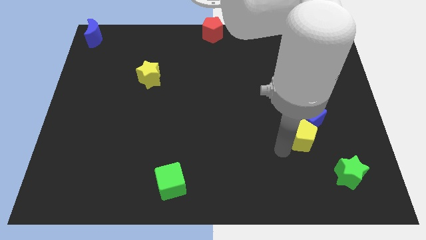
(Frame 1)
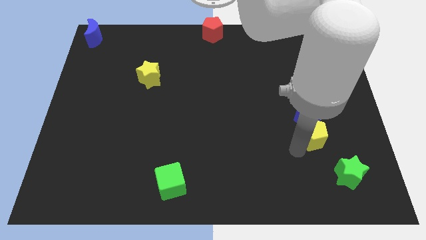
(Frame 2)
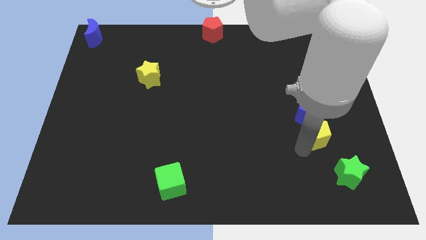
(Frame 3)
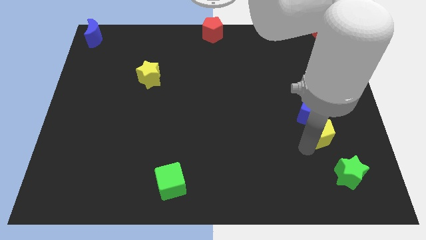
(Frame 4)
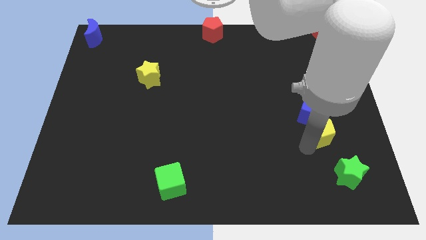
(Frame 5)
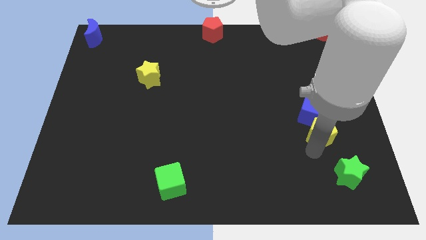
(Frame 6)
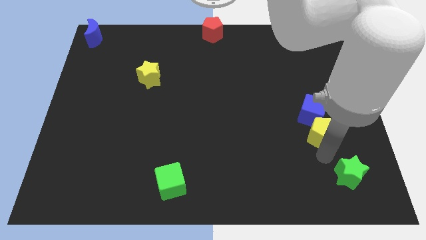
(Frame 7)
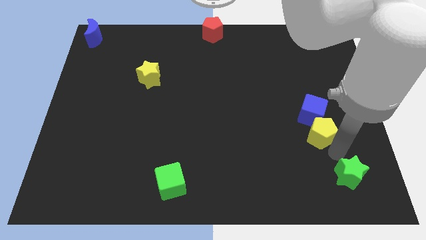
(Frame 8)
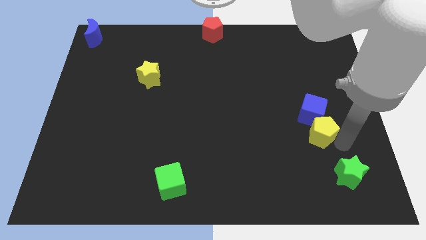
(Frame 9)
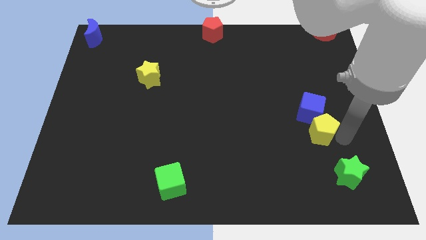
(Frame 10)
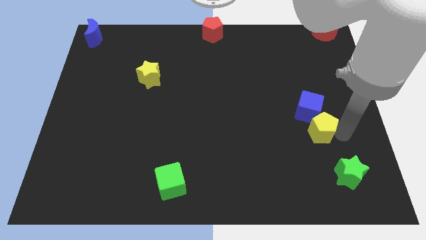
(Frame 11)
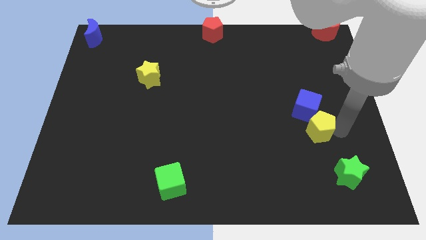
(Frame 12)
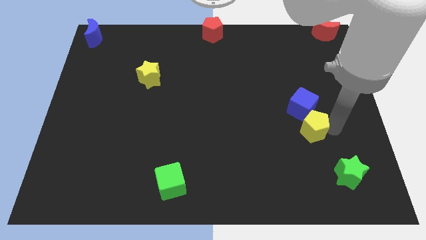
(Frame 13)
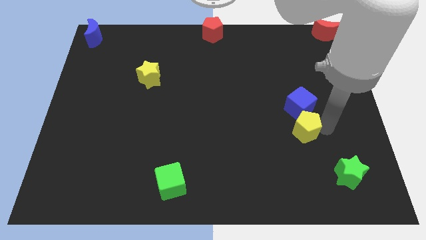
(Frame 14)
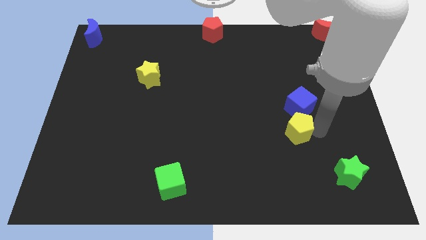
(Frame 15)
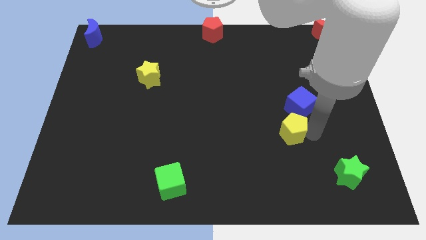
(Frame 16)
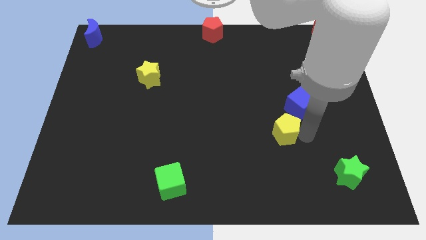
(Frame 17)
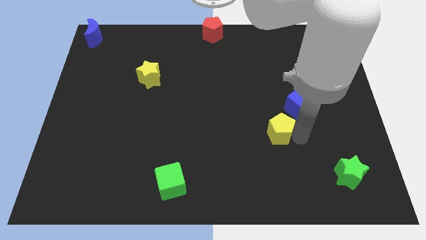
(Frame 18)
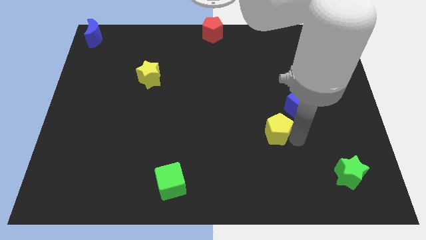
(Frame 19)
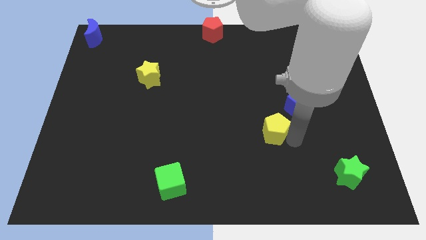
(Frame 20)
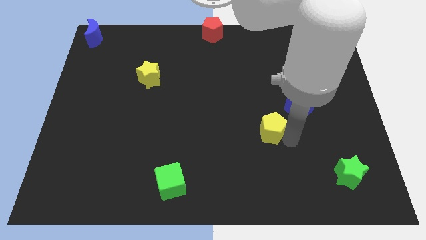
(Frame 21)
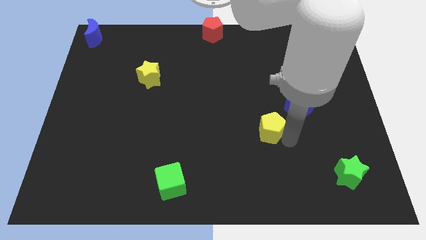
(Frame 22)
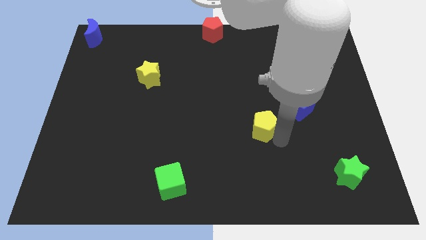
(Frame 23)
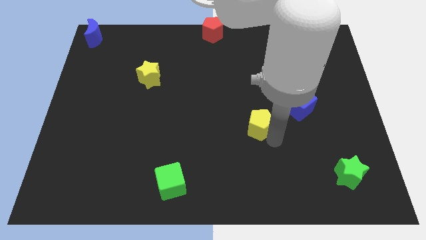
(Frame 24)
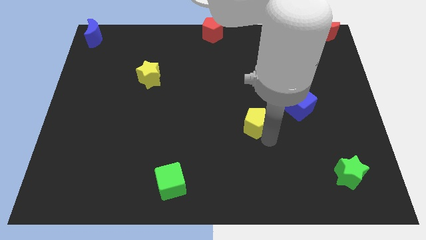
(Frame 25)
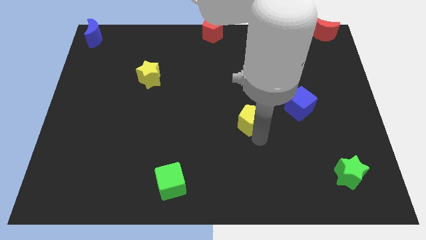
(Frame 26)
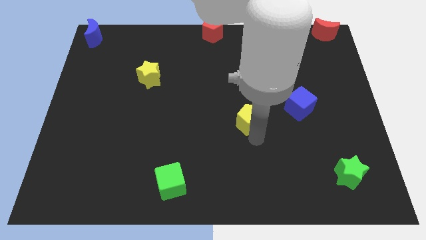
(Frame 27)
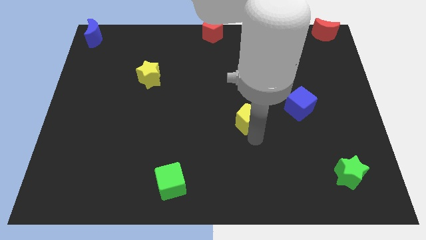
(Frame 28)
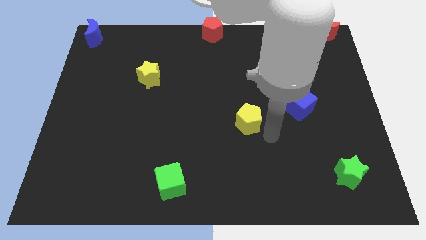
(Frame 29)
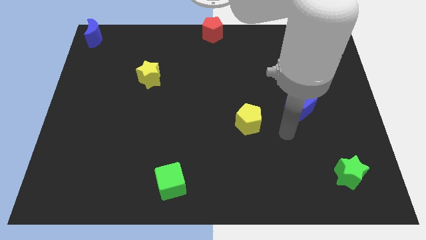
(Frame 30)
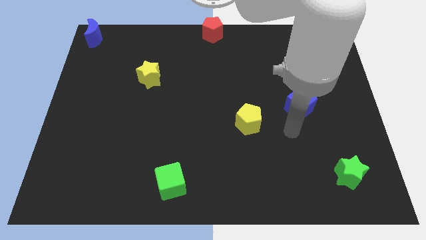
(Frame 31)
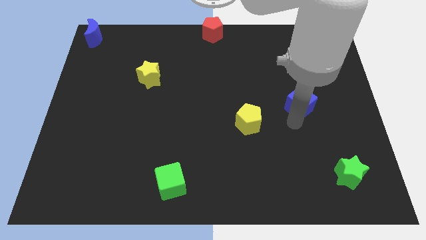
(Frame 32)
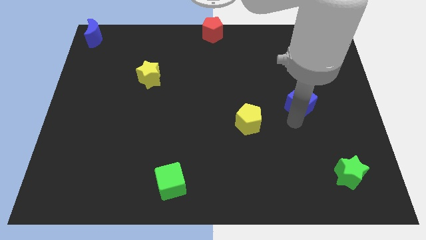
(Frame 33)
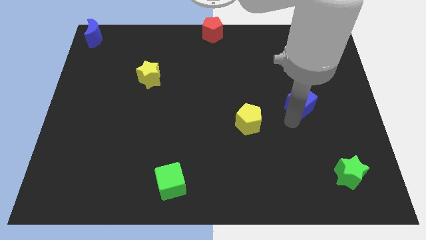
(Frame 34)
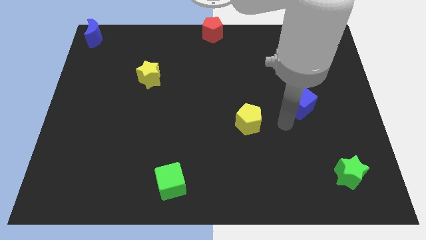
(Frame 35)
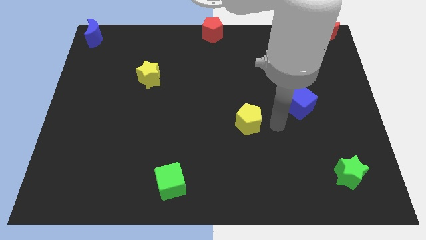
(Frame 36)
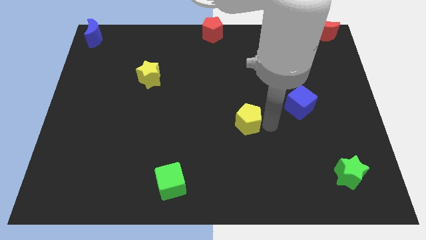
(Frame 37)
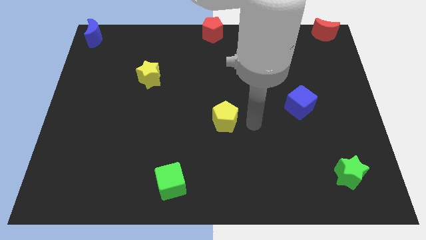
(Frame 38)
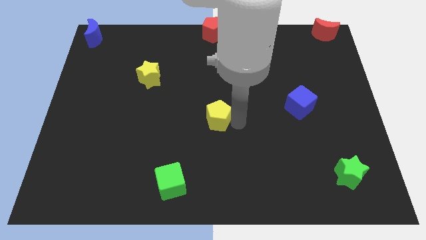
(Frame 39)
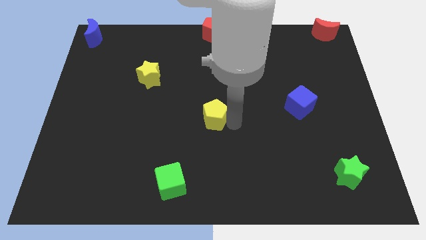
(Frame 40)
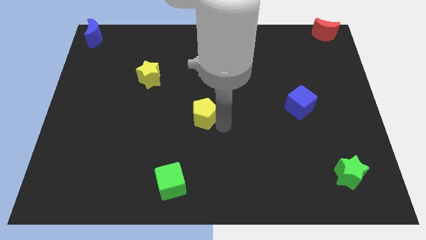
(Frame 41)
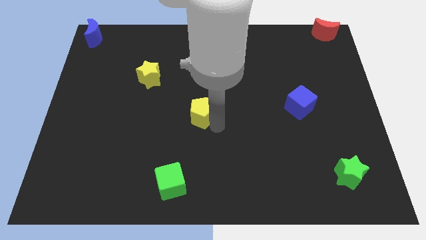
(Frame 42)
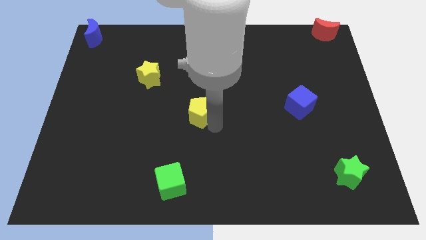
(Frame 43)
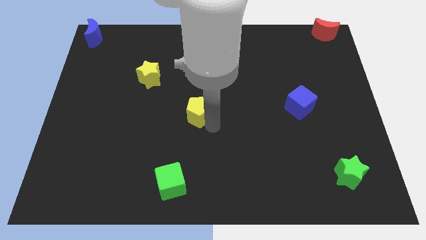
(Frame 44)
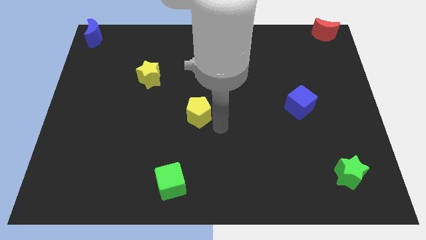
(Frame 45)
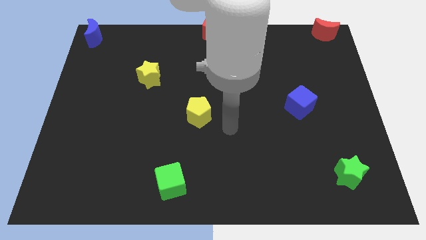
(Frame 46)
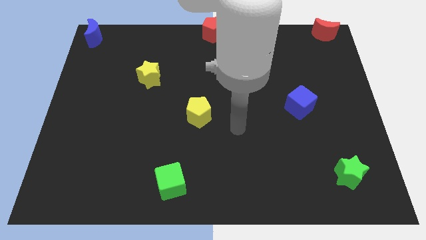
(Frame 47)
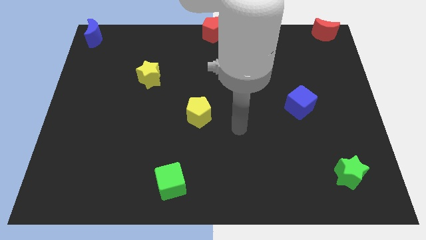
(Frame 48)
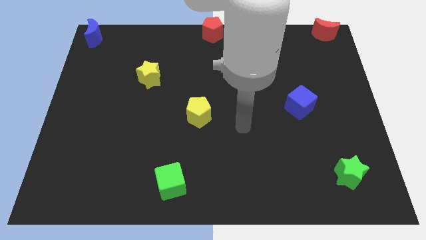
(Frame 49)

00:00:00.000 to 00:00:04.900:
move yellow pentagon slightly left

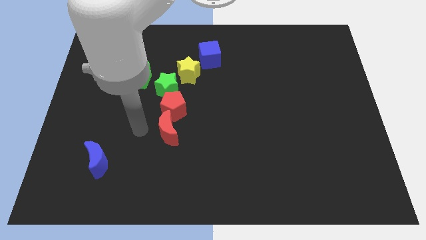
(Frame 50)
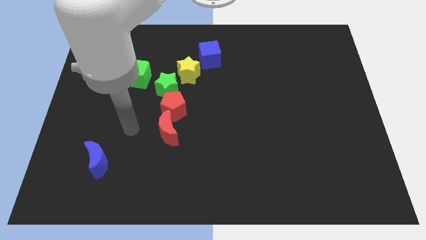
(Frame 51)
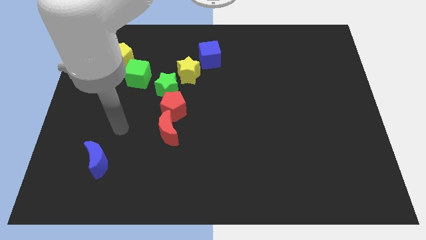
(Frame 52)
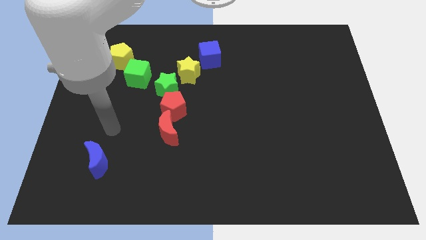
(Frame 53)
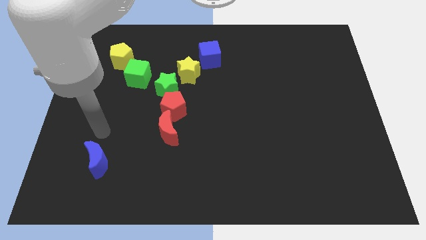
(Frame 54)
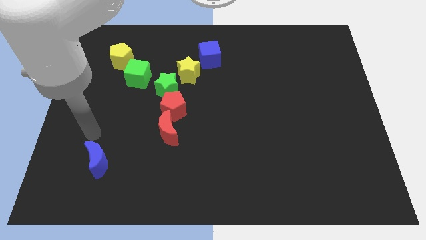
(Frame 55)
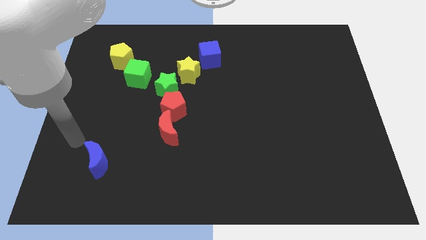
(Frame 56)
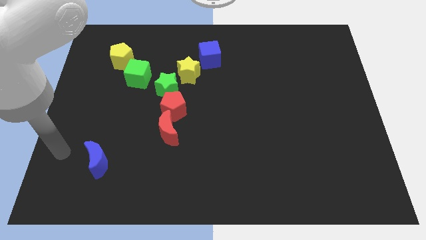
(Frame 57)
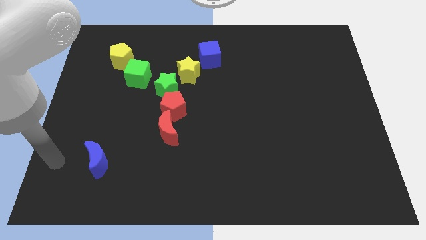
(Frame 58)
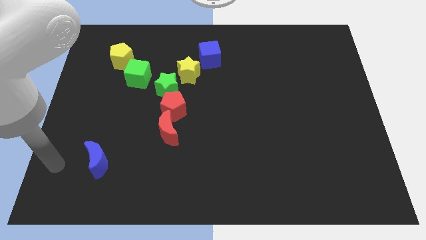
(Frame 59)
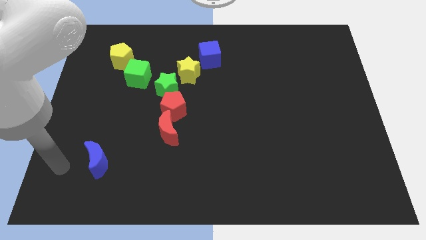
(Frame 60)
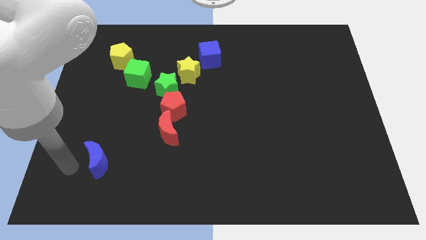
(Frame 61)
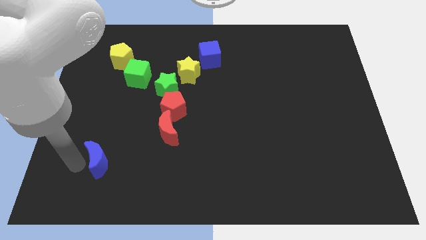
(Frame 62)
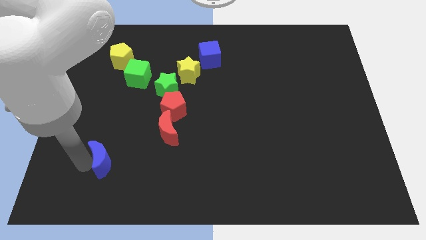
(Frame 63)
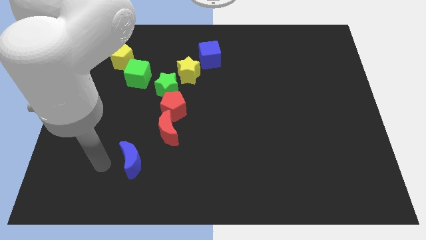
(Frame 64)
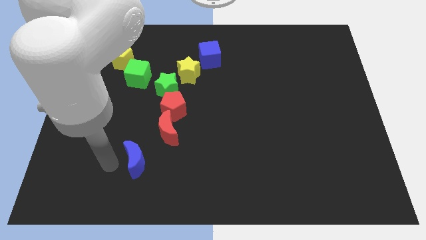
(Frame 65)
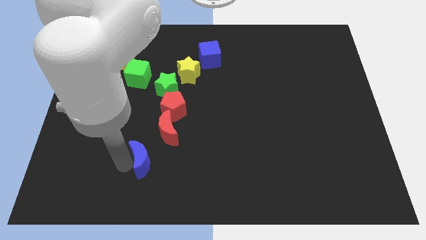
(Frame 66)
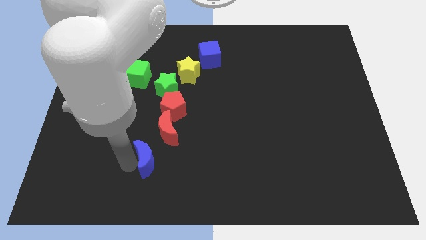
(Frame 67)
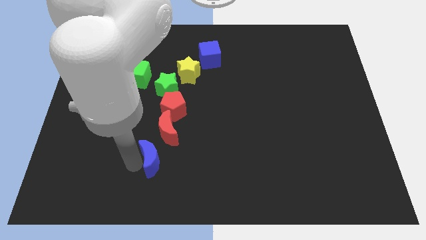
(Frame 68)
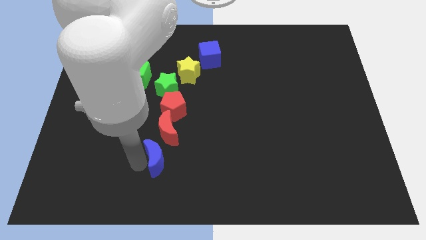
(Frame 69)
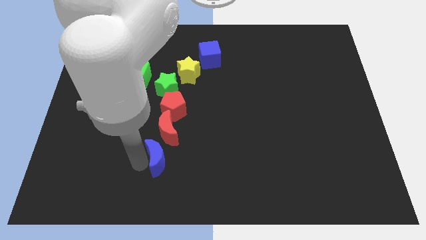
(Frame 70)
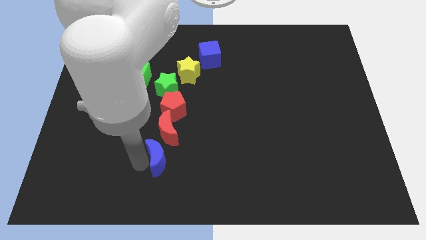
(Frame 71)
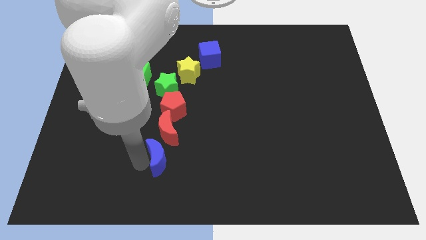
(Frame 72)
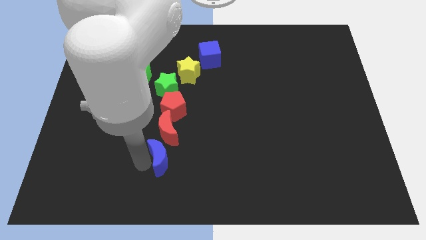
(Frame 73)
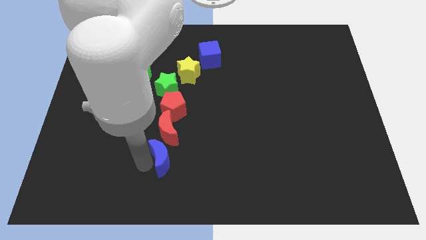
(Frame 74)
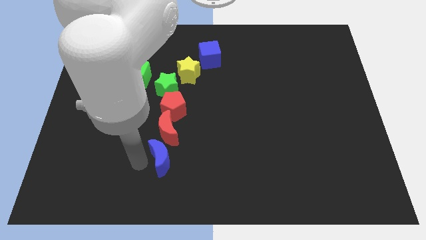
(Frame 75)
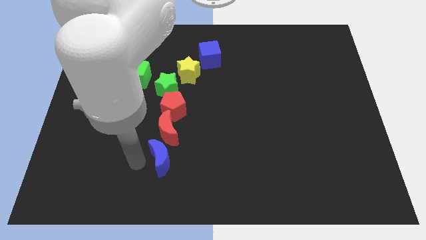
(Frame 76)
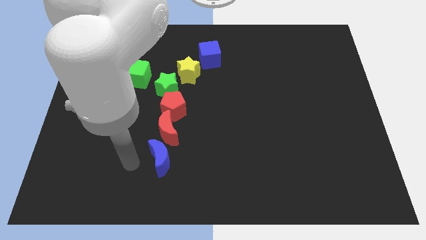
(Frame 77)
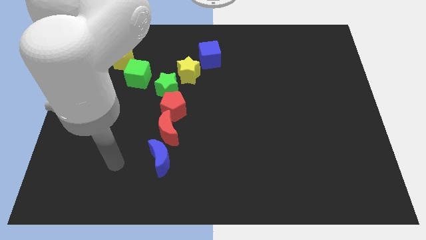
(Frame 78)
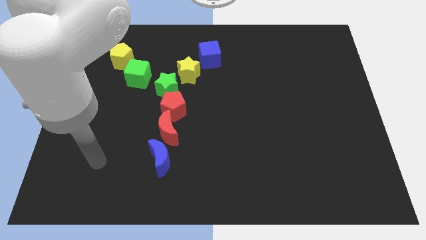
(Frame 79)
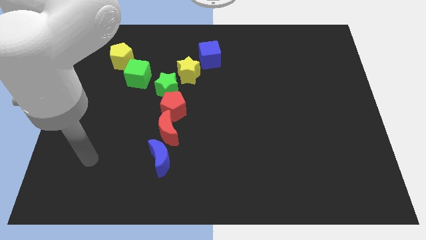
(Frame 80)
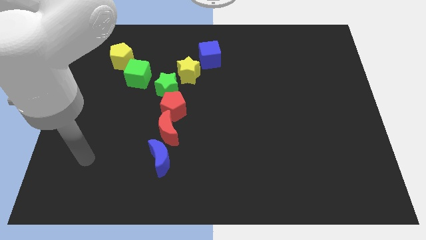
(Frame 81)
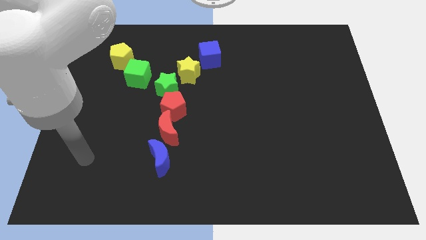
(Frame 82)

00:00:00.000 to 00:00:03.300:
push blue moon below red moon

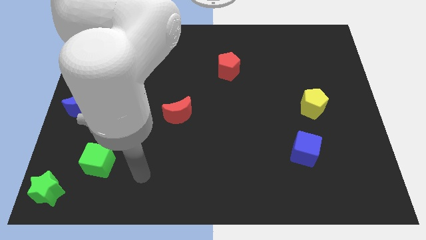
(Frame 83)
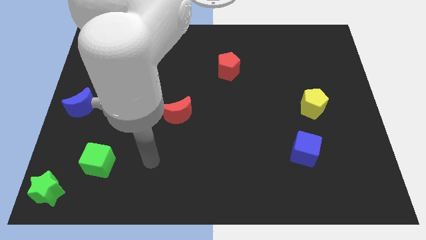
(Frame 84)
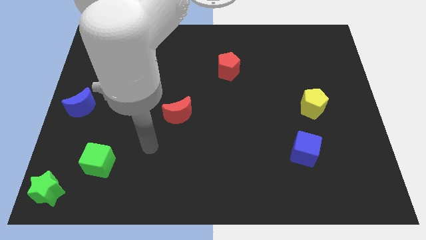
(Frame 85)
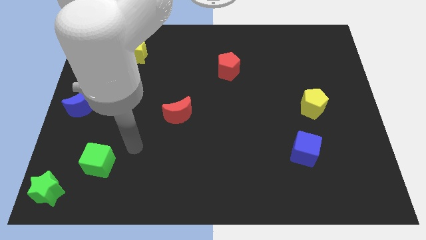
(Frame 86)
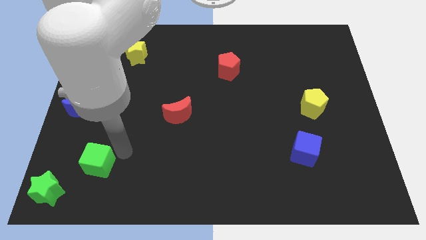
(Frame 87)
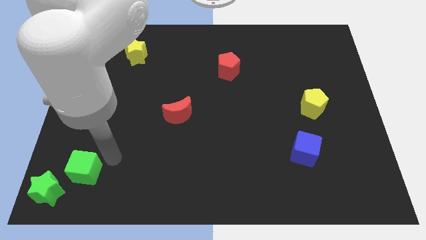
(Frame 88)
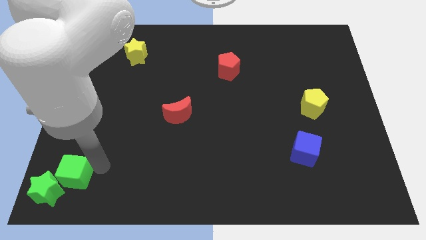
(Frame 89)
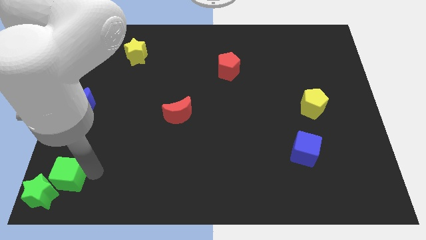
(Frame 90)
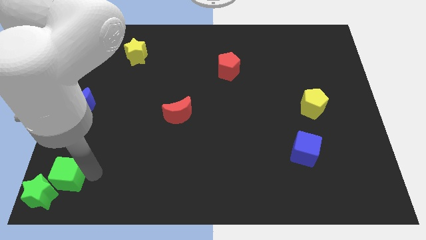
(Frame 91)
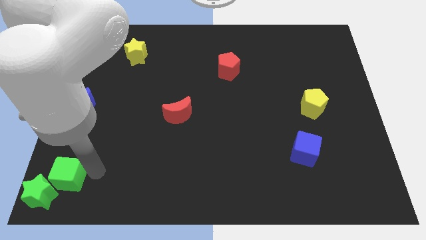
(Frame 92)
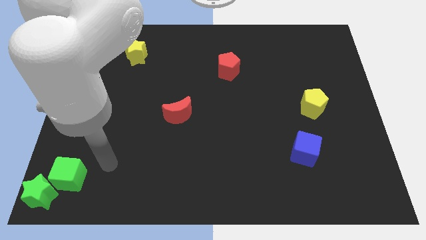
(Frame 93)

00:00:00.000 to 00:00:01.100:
push the green cube into the green star
